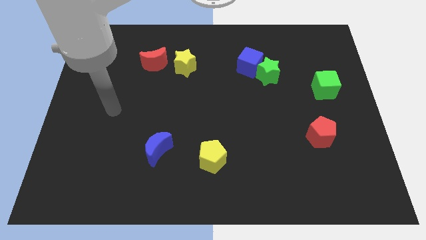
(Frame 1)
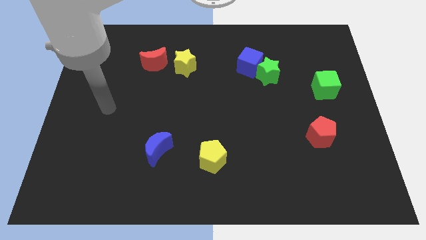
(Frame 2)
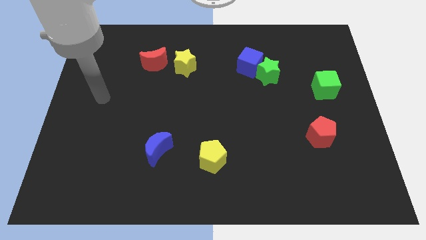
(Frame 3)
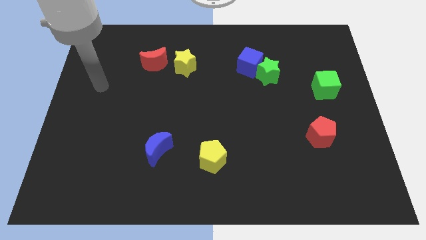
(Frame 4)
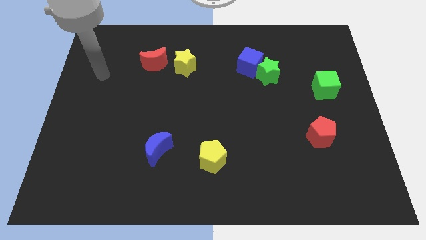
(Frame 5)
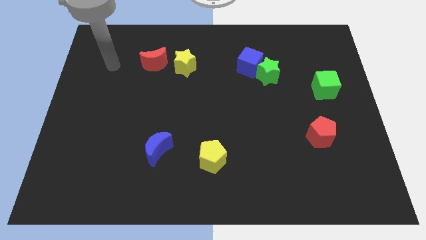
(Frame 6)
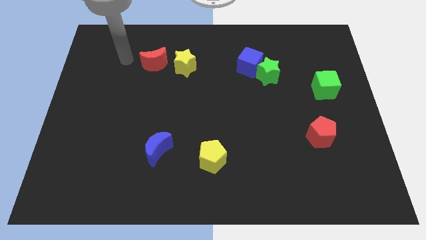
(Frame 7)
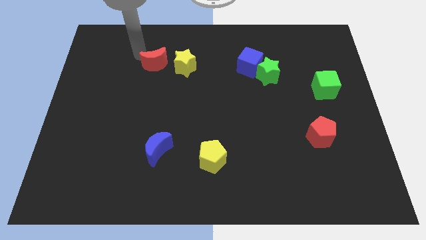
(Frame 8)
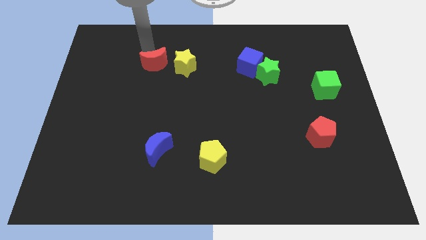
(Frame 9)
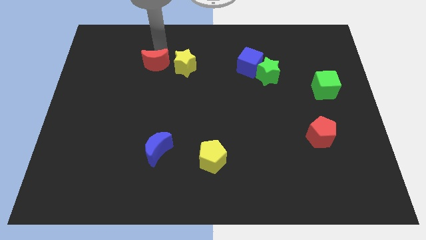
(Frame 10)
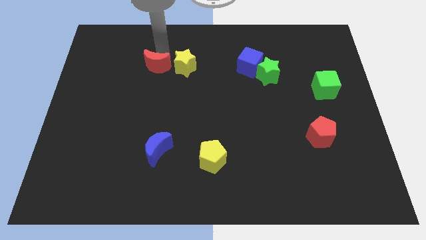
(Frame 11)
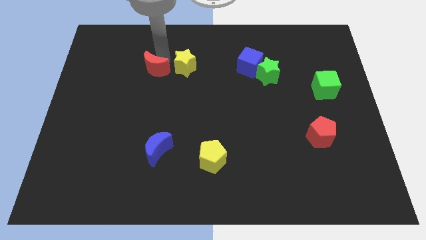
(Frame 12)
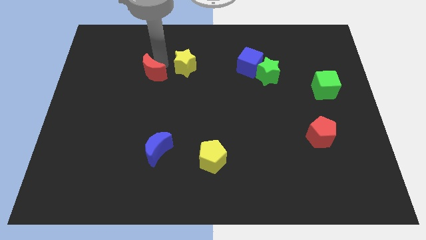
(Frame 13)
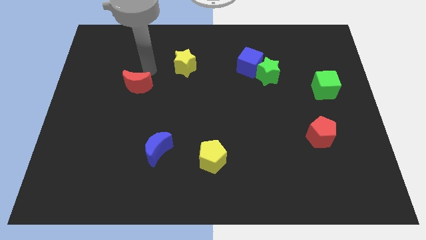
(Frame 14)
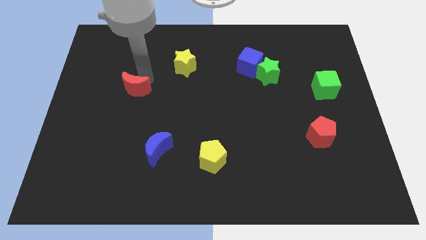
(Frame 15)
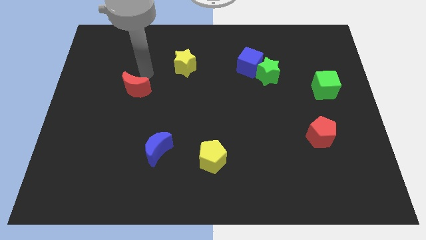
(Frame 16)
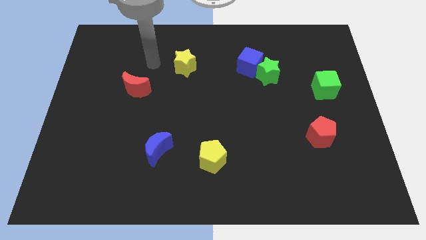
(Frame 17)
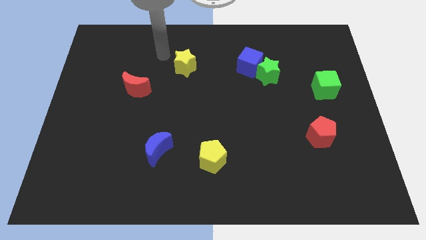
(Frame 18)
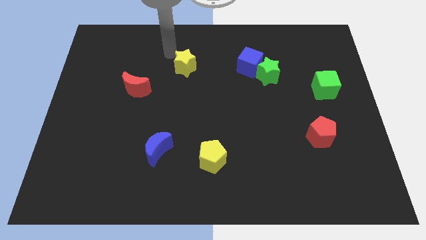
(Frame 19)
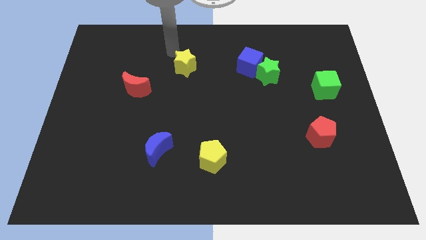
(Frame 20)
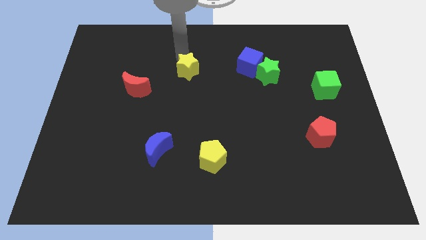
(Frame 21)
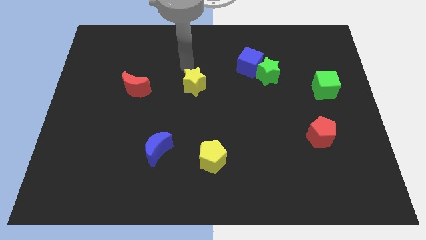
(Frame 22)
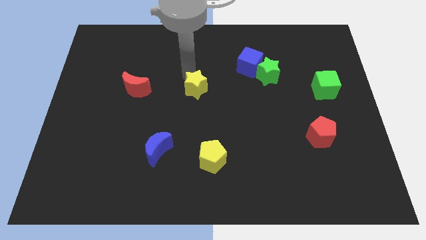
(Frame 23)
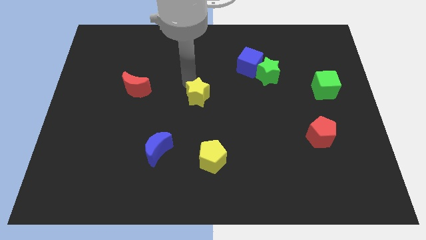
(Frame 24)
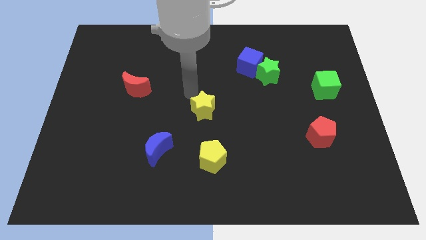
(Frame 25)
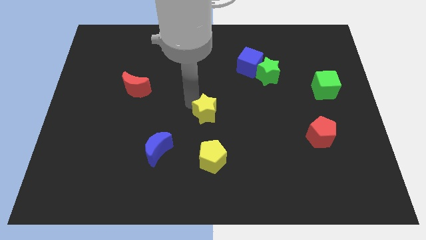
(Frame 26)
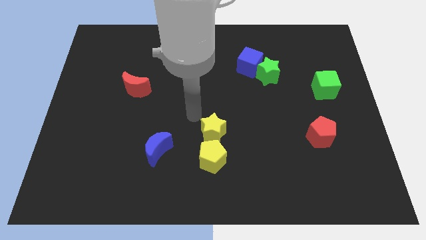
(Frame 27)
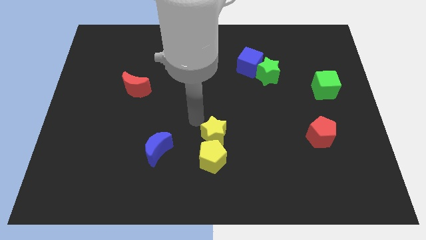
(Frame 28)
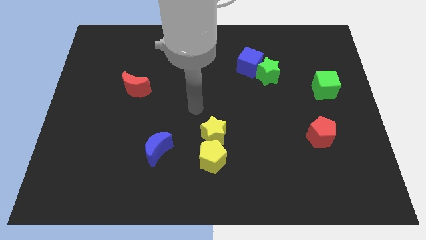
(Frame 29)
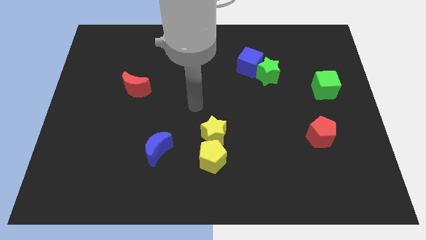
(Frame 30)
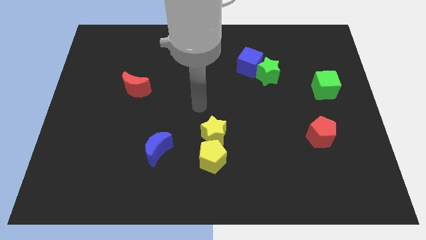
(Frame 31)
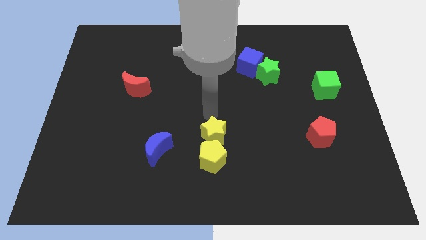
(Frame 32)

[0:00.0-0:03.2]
drag the yellow star slightly downwards

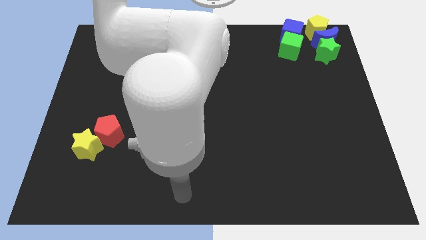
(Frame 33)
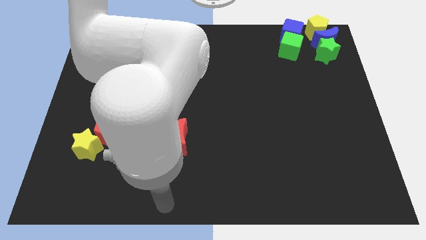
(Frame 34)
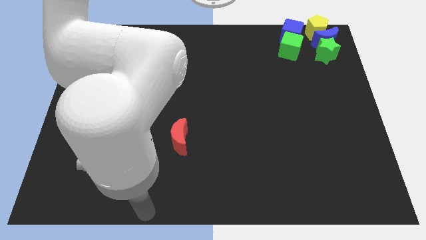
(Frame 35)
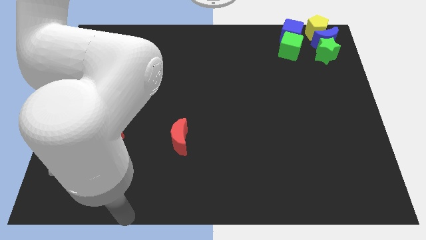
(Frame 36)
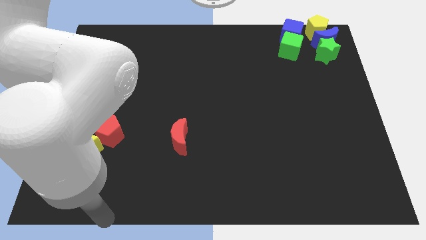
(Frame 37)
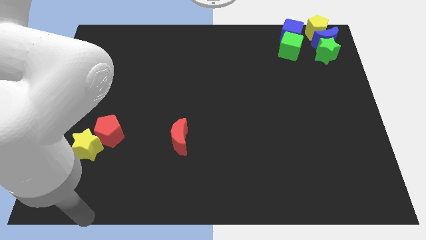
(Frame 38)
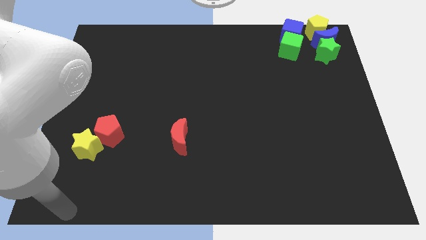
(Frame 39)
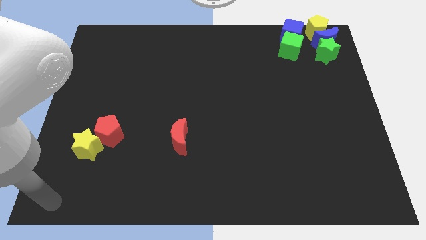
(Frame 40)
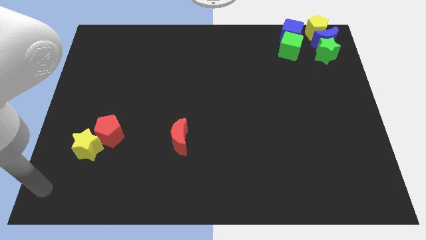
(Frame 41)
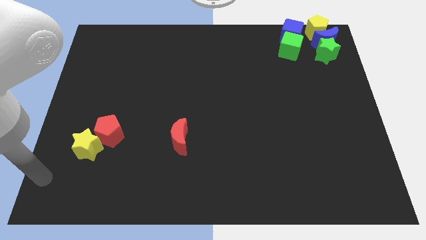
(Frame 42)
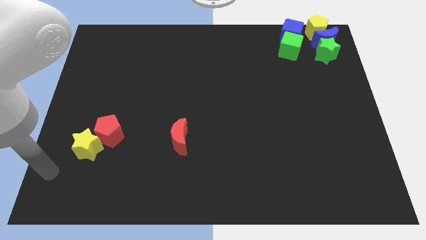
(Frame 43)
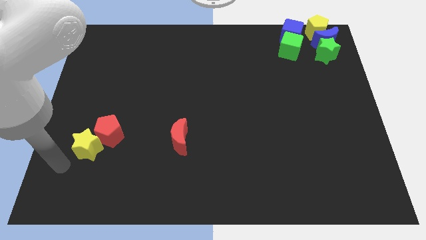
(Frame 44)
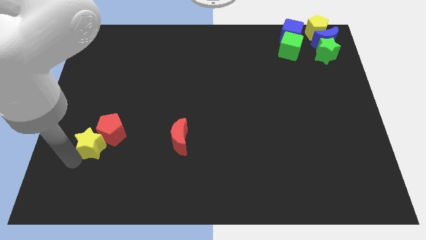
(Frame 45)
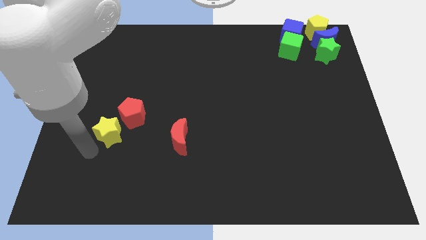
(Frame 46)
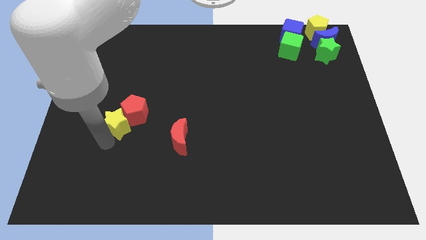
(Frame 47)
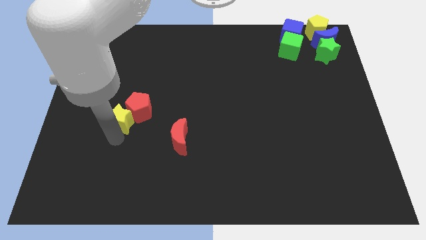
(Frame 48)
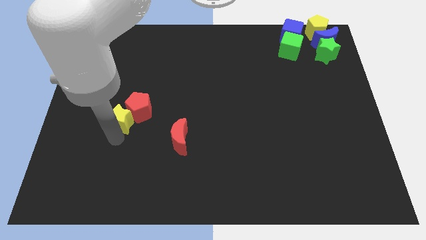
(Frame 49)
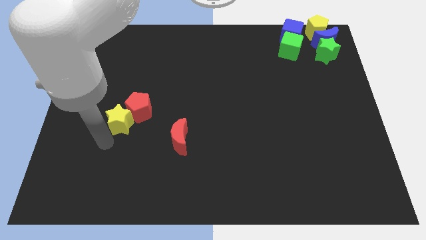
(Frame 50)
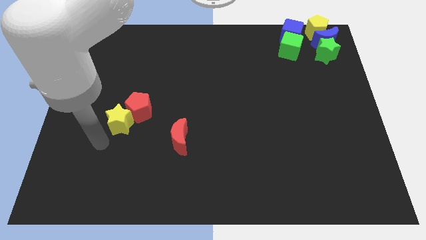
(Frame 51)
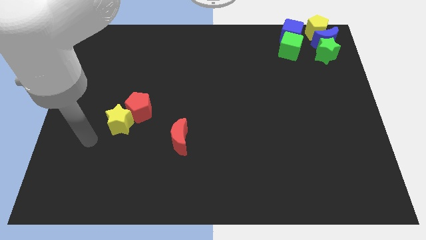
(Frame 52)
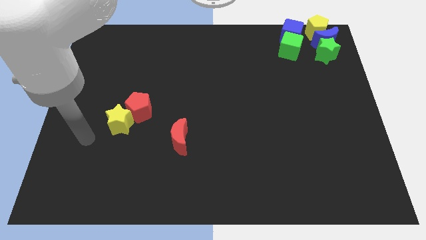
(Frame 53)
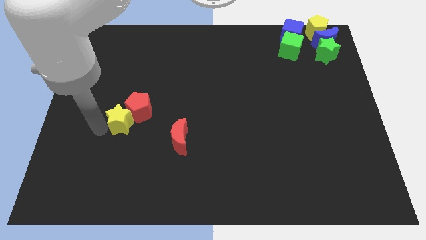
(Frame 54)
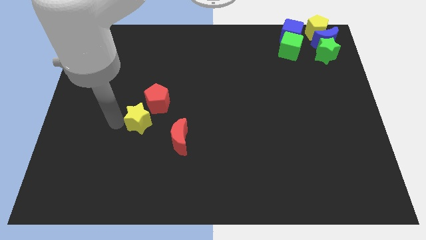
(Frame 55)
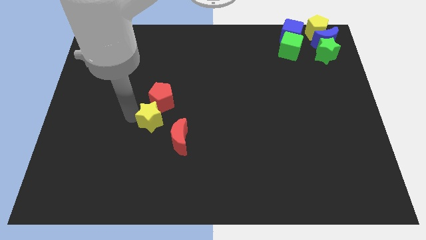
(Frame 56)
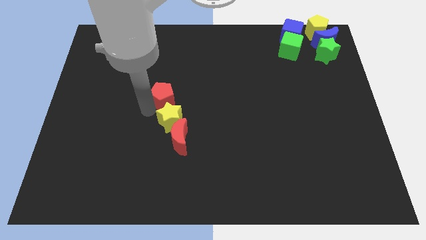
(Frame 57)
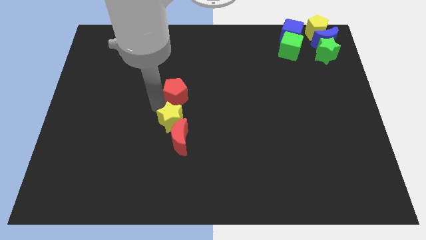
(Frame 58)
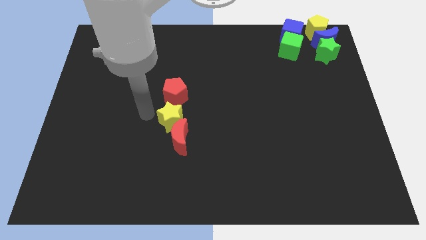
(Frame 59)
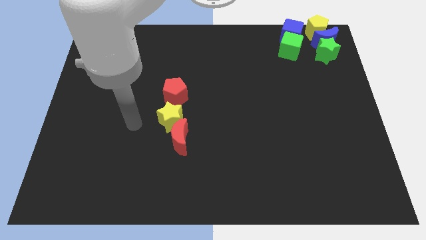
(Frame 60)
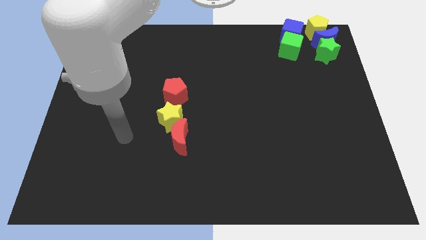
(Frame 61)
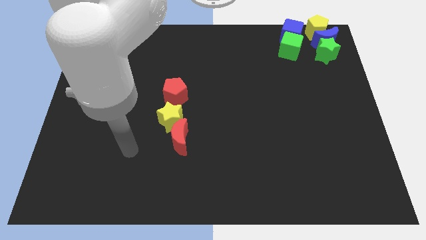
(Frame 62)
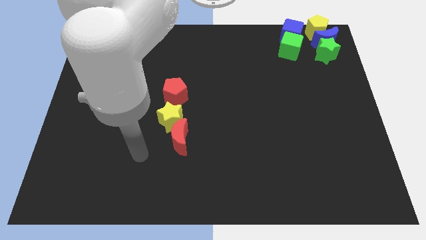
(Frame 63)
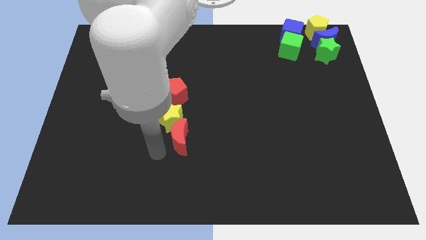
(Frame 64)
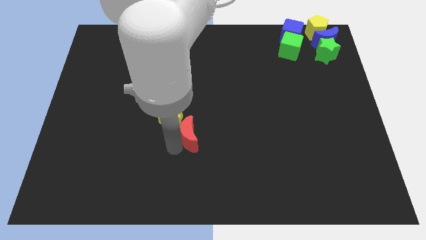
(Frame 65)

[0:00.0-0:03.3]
push the yellow star in between the red pentagon and red crescent vertically

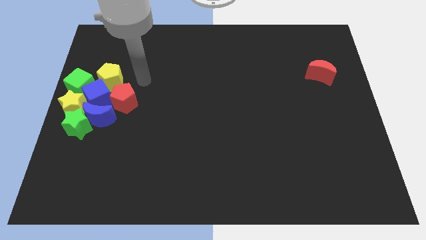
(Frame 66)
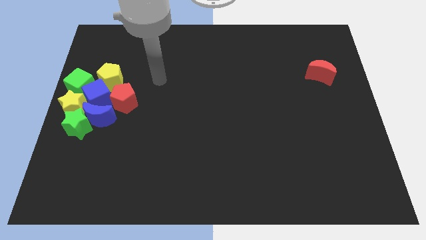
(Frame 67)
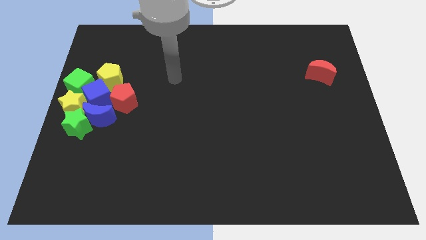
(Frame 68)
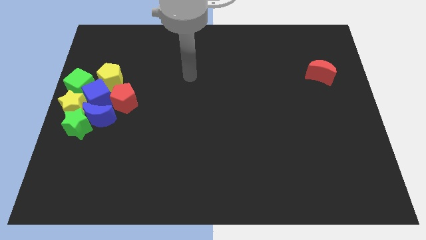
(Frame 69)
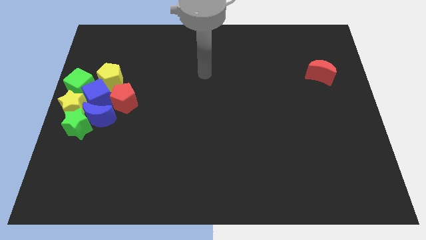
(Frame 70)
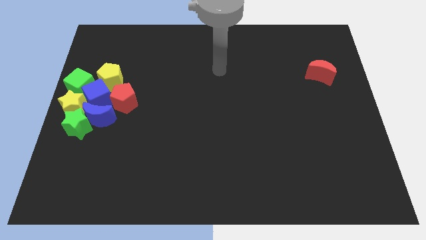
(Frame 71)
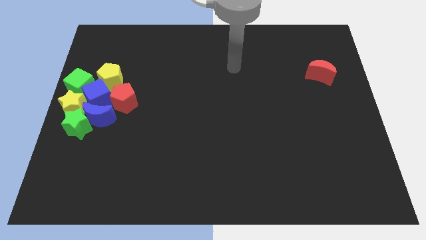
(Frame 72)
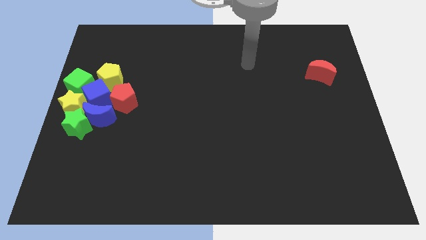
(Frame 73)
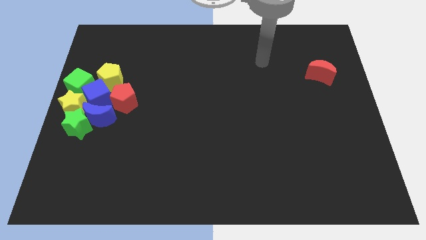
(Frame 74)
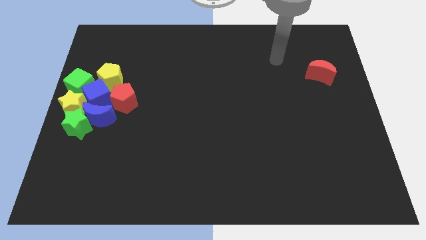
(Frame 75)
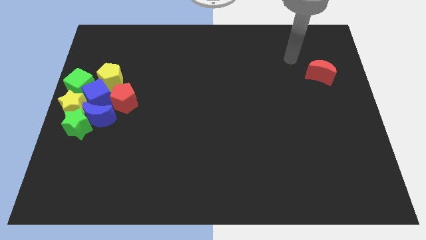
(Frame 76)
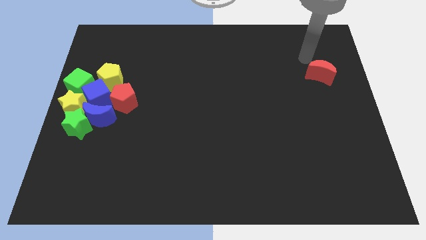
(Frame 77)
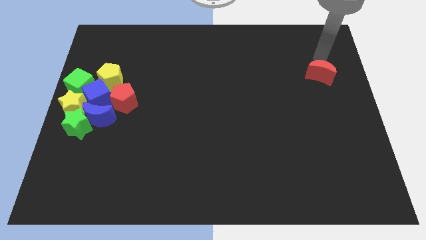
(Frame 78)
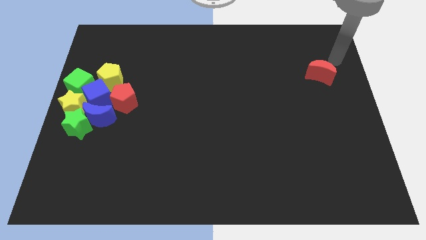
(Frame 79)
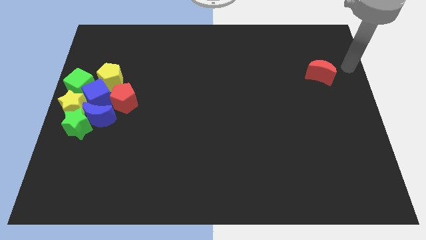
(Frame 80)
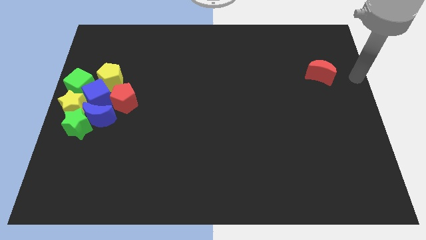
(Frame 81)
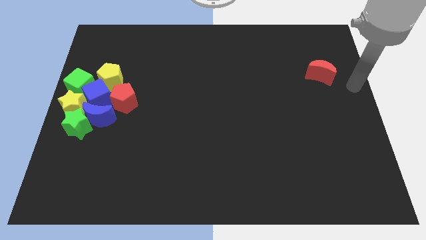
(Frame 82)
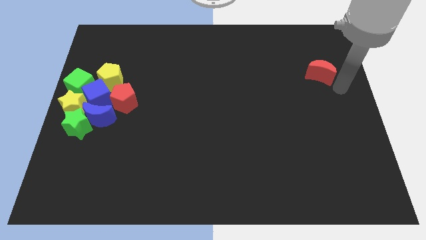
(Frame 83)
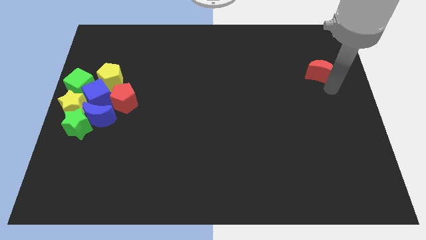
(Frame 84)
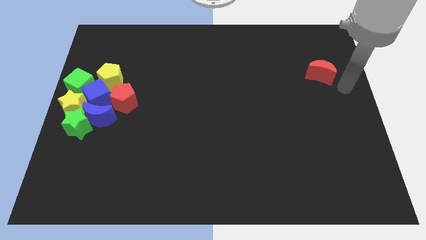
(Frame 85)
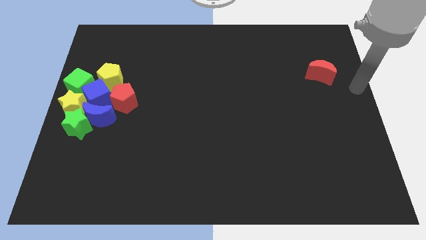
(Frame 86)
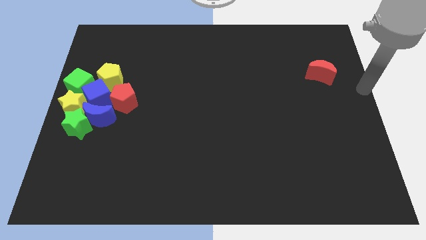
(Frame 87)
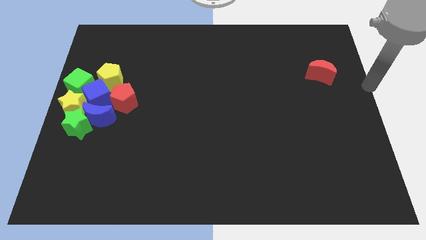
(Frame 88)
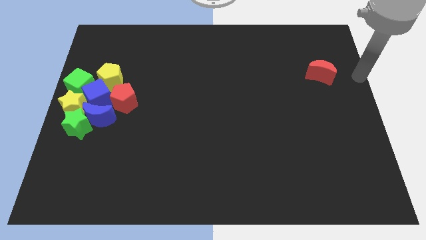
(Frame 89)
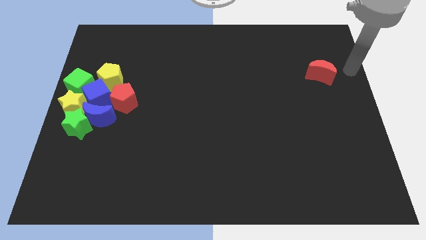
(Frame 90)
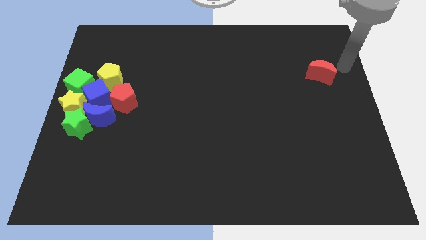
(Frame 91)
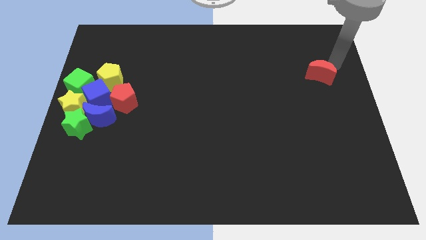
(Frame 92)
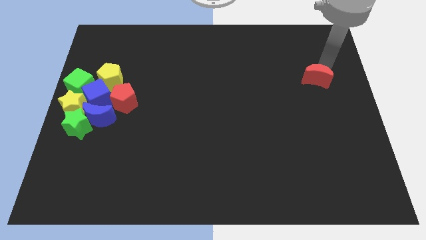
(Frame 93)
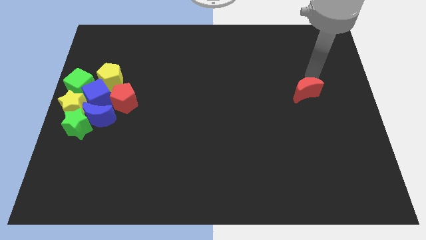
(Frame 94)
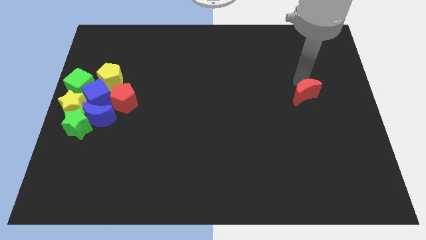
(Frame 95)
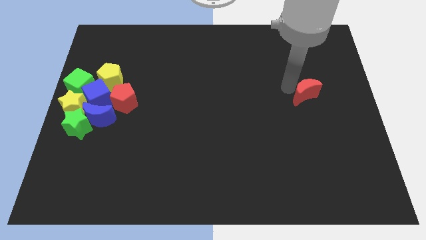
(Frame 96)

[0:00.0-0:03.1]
push the red crescent slightly to the bottom
